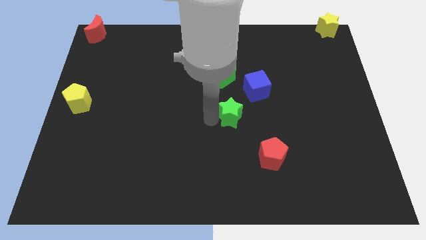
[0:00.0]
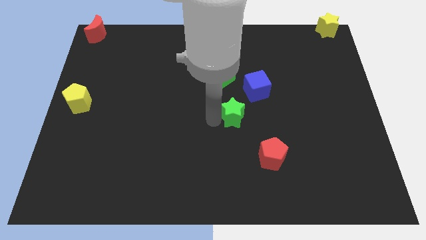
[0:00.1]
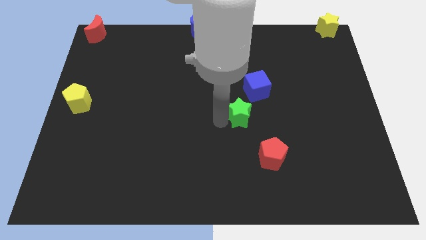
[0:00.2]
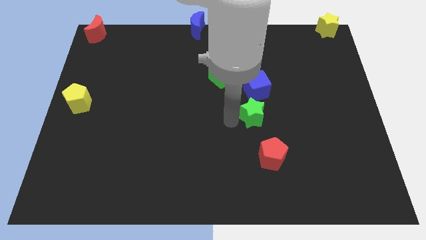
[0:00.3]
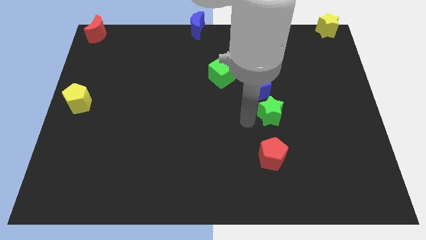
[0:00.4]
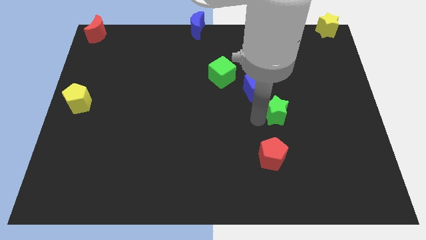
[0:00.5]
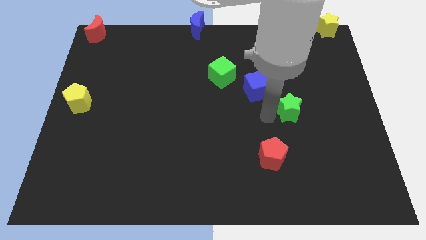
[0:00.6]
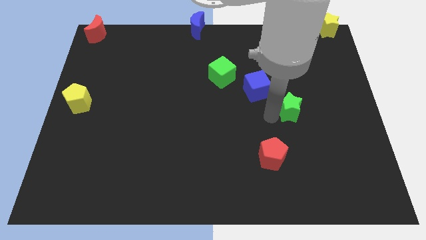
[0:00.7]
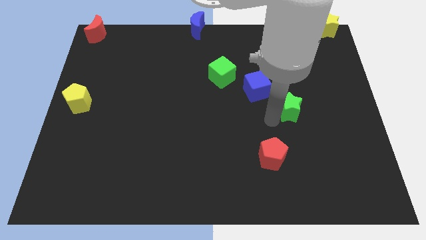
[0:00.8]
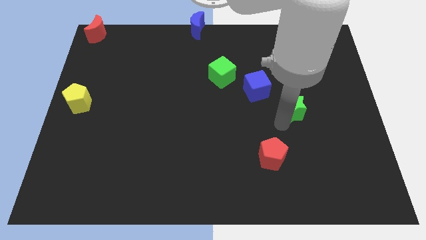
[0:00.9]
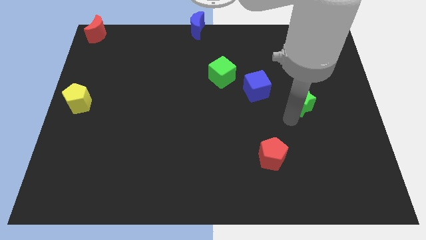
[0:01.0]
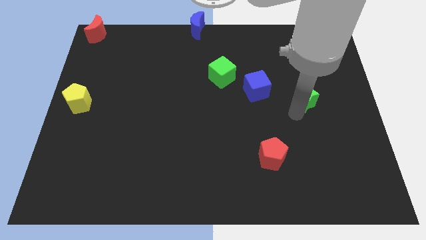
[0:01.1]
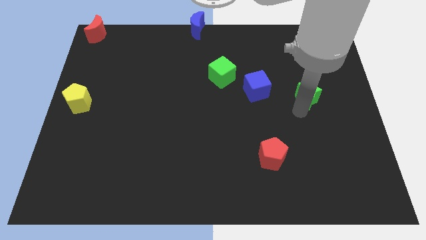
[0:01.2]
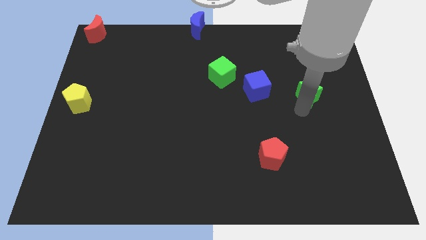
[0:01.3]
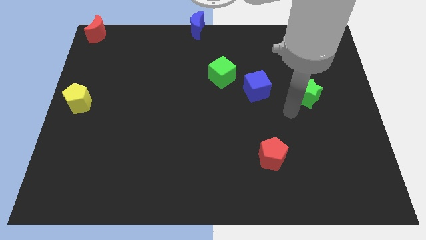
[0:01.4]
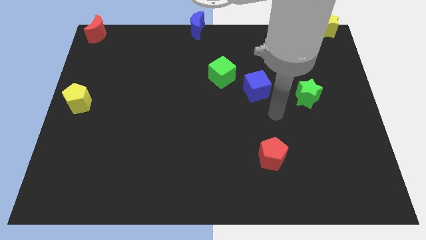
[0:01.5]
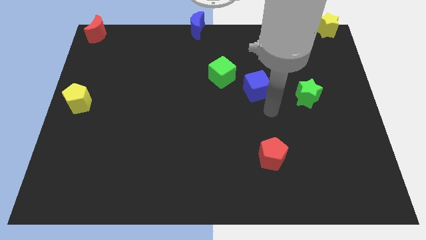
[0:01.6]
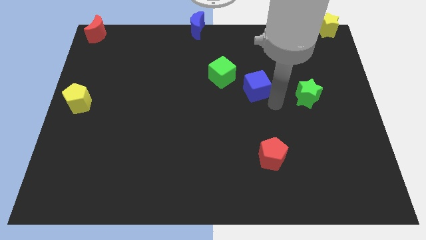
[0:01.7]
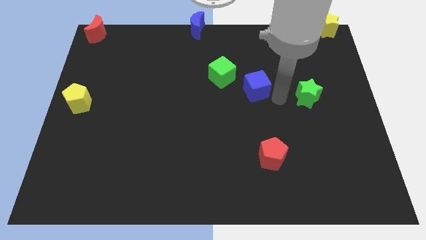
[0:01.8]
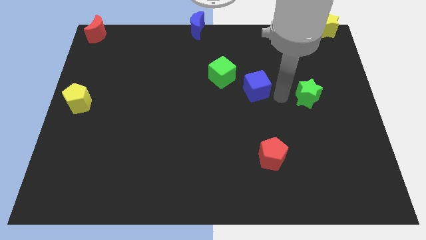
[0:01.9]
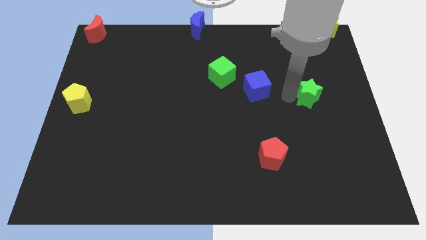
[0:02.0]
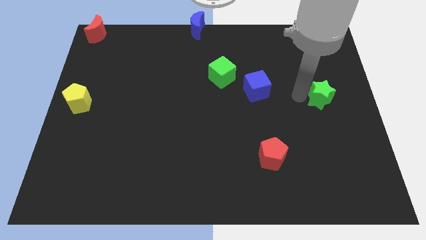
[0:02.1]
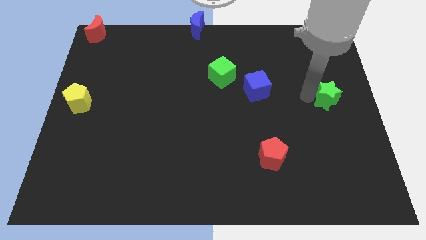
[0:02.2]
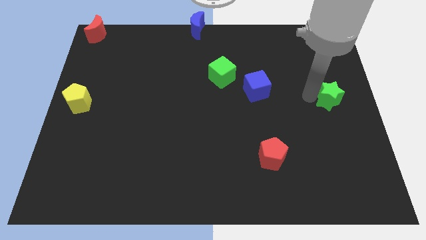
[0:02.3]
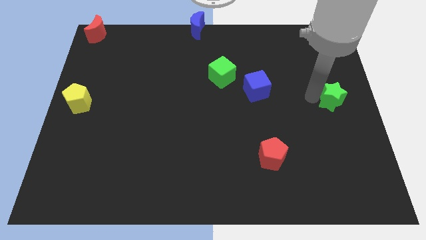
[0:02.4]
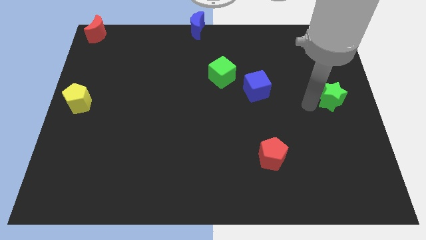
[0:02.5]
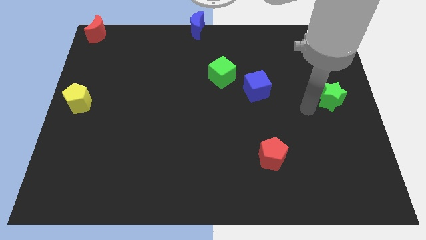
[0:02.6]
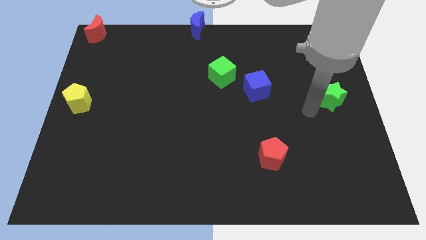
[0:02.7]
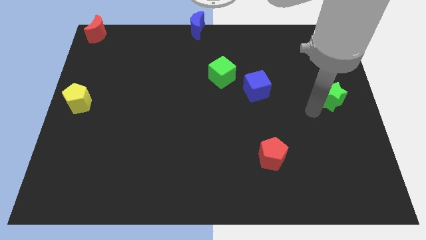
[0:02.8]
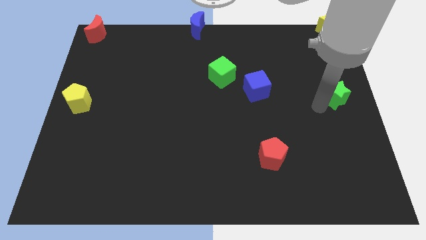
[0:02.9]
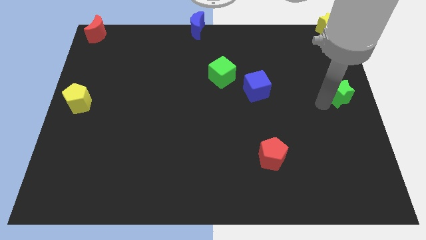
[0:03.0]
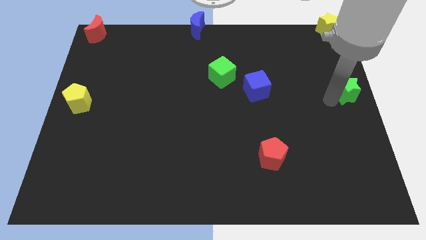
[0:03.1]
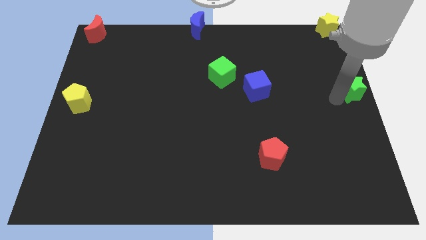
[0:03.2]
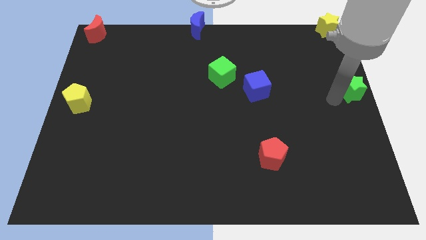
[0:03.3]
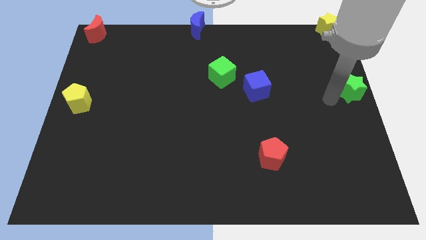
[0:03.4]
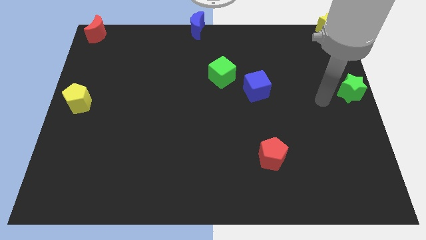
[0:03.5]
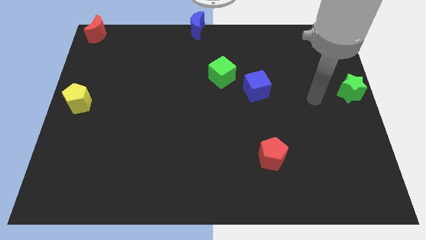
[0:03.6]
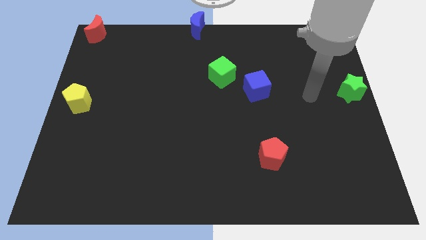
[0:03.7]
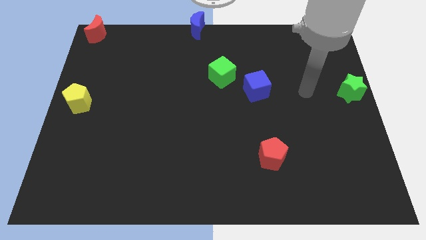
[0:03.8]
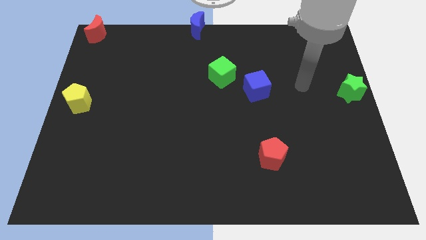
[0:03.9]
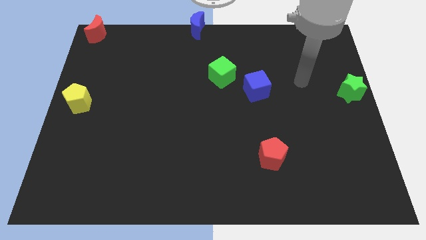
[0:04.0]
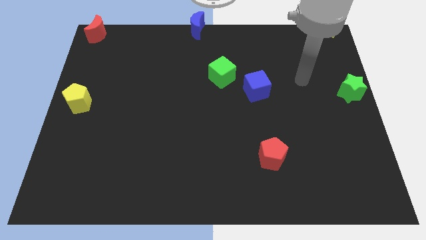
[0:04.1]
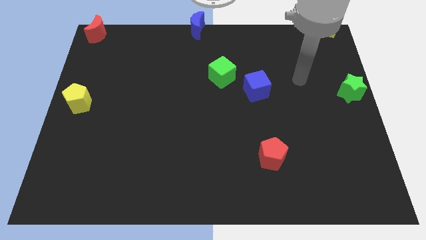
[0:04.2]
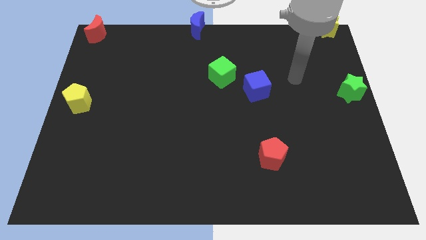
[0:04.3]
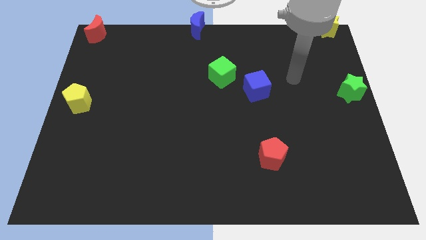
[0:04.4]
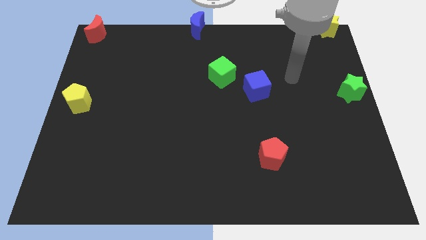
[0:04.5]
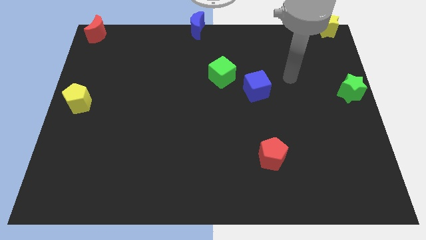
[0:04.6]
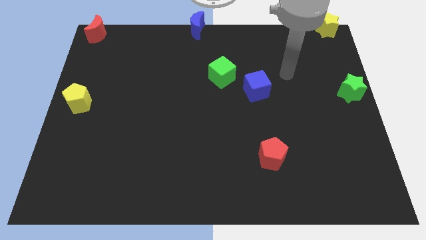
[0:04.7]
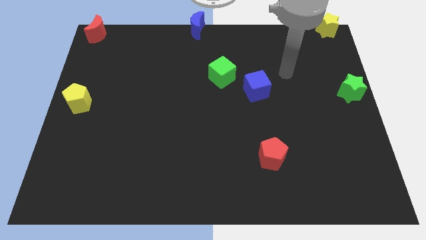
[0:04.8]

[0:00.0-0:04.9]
push green star to the center right

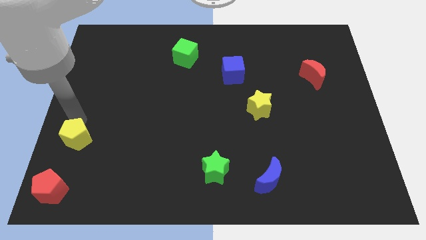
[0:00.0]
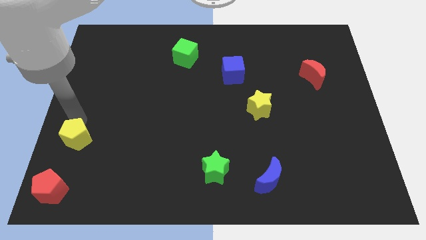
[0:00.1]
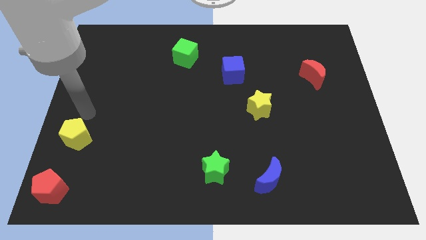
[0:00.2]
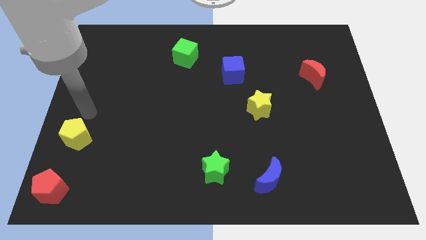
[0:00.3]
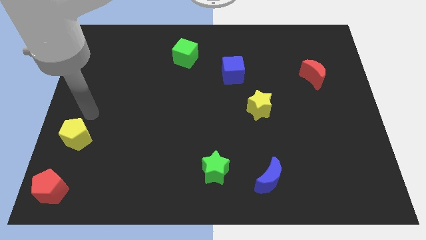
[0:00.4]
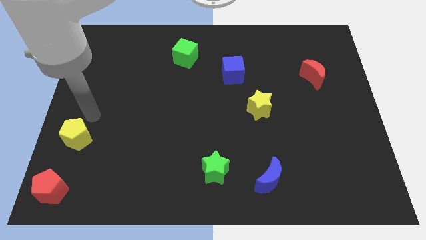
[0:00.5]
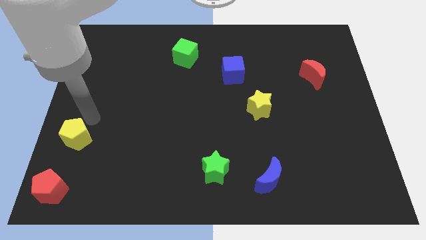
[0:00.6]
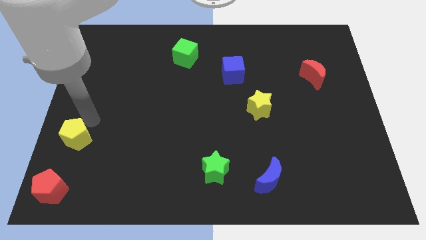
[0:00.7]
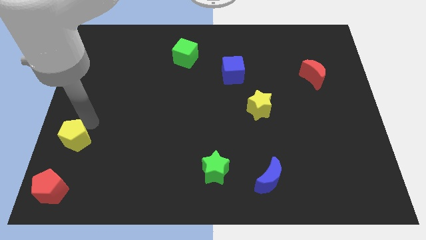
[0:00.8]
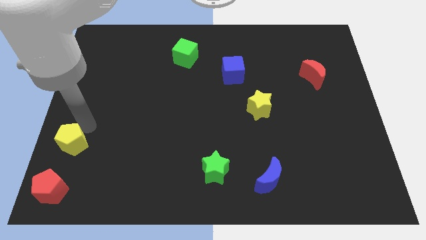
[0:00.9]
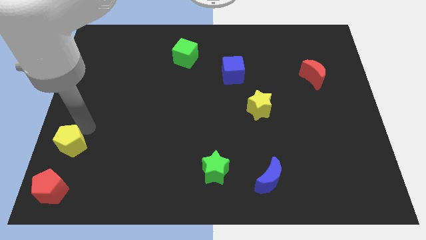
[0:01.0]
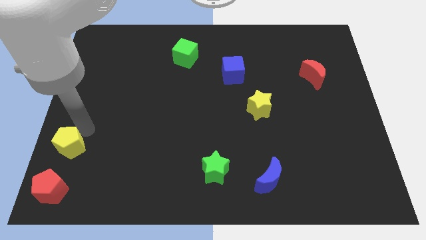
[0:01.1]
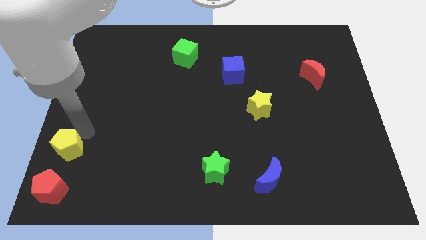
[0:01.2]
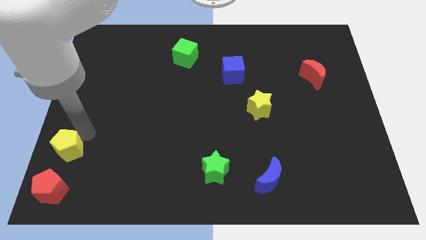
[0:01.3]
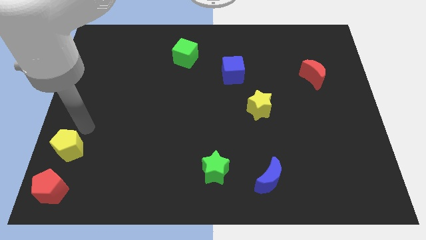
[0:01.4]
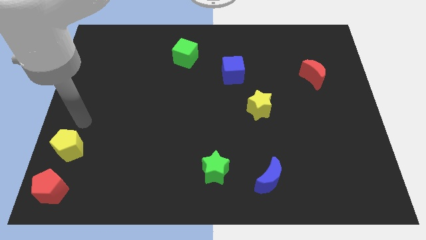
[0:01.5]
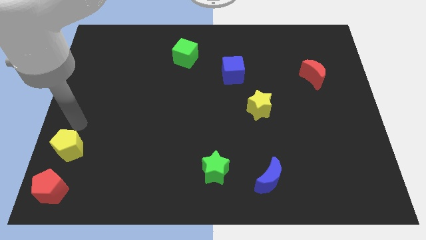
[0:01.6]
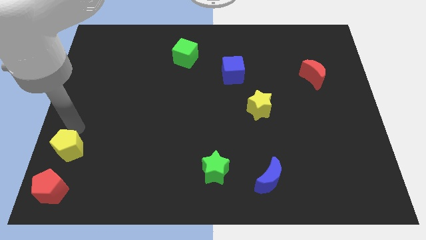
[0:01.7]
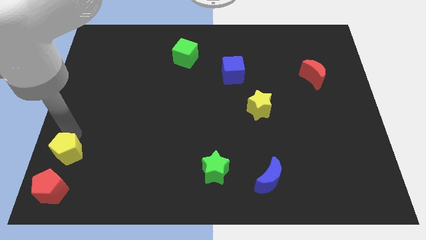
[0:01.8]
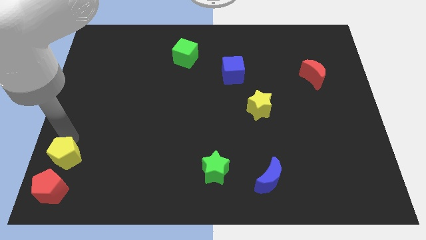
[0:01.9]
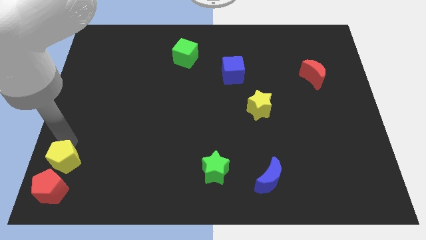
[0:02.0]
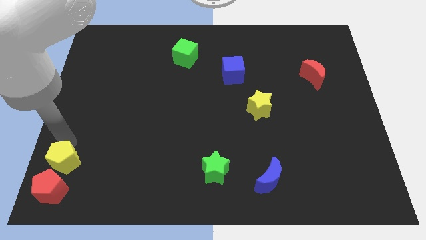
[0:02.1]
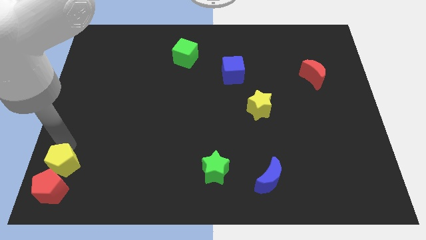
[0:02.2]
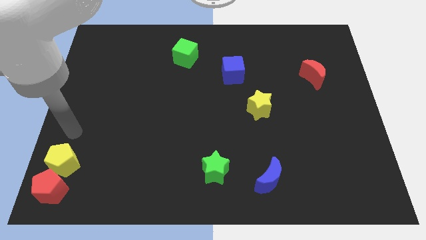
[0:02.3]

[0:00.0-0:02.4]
push the yellow pentagon at the top side of the red pentagon

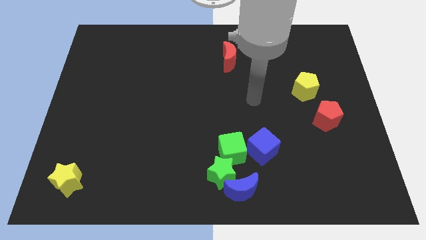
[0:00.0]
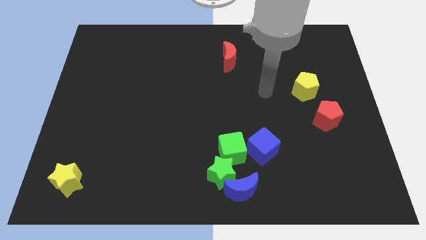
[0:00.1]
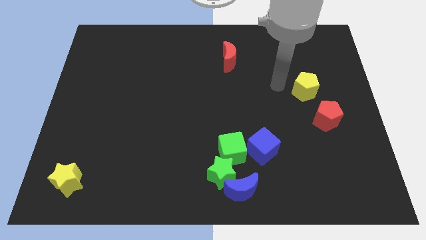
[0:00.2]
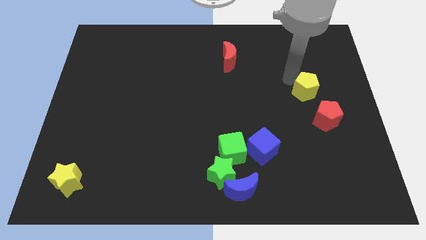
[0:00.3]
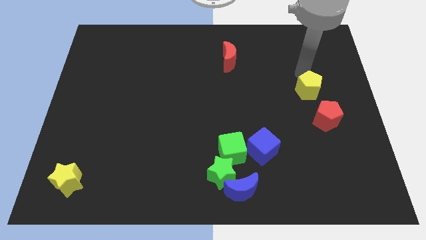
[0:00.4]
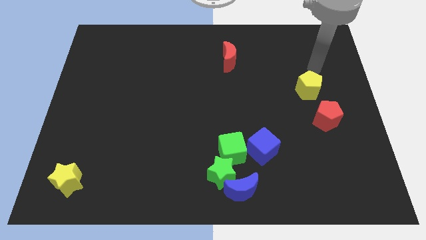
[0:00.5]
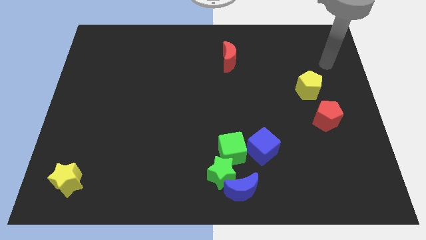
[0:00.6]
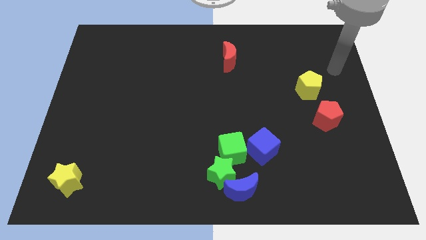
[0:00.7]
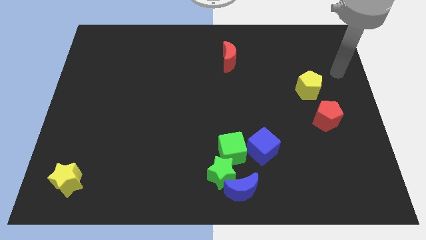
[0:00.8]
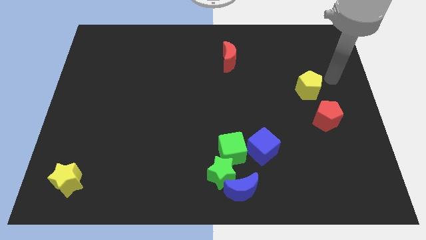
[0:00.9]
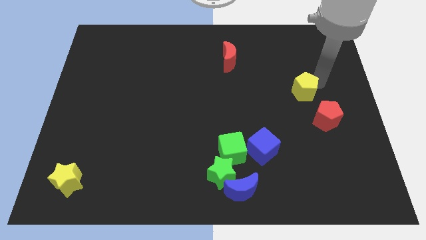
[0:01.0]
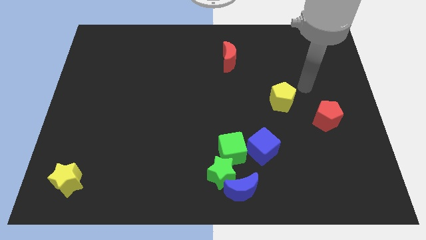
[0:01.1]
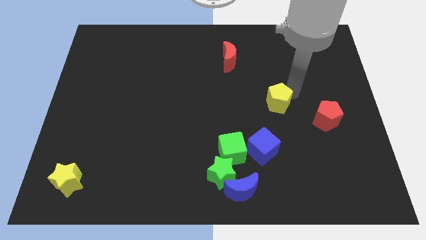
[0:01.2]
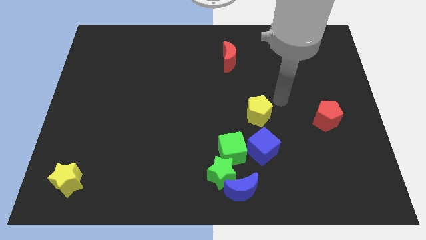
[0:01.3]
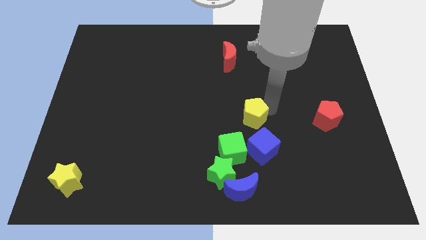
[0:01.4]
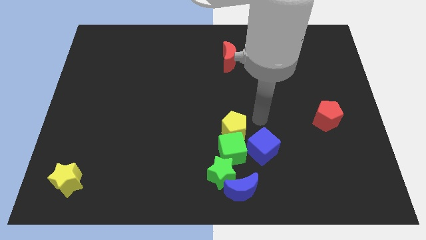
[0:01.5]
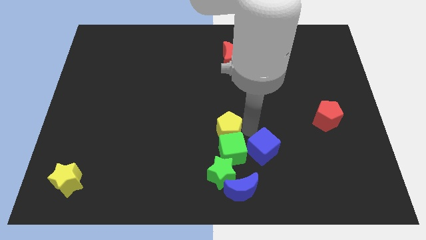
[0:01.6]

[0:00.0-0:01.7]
place yellow pentagon above the green cube
